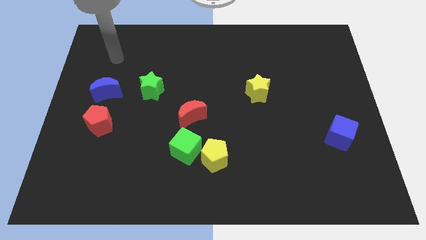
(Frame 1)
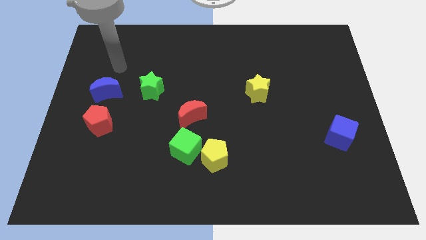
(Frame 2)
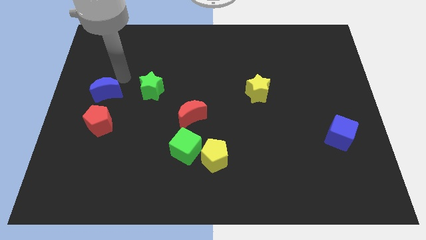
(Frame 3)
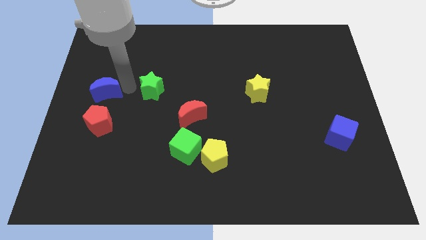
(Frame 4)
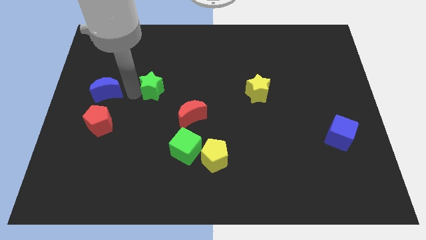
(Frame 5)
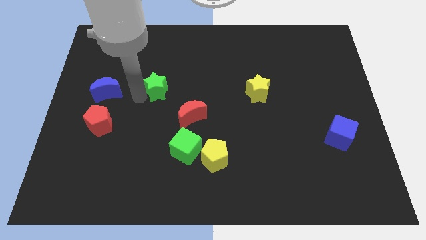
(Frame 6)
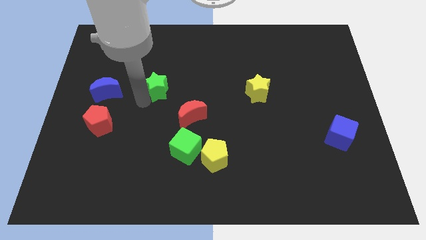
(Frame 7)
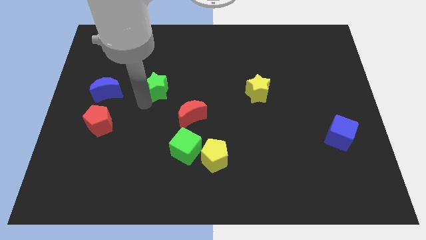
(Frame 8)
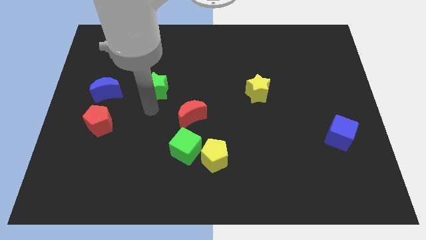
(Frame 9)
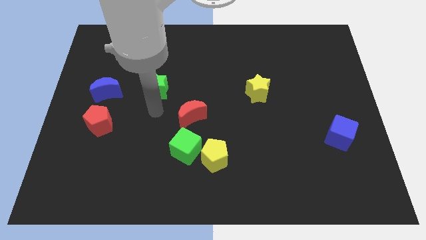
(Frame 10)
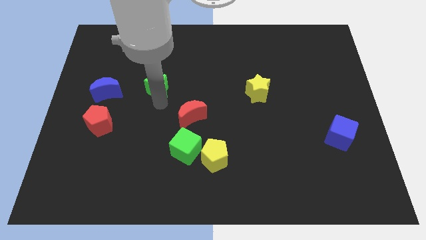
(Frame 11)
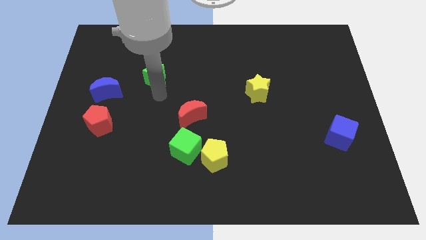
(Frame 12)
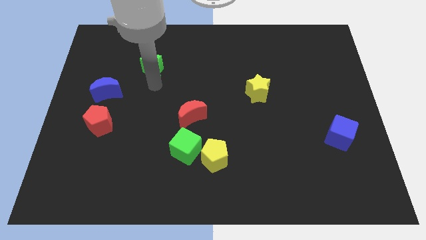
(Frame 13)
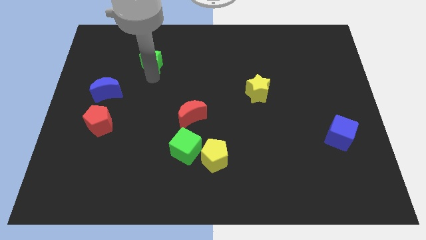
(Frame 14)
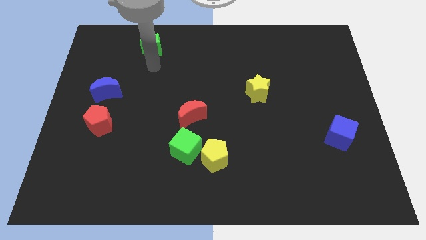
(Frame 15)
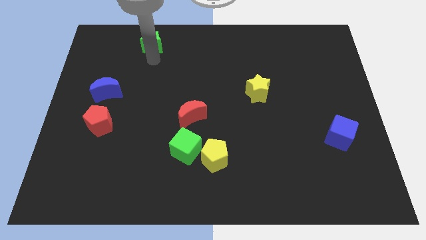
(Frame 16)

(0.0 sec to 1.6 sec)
move the green star to the top of the board

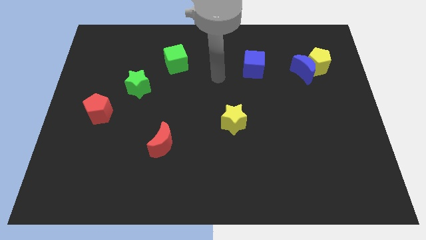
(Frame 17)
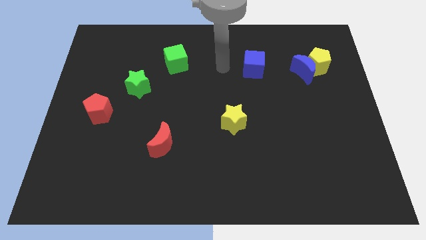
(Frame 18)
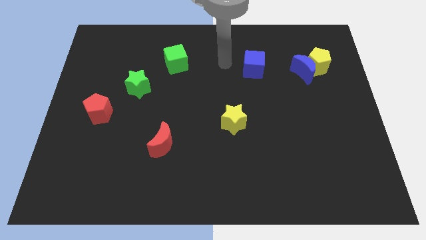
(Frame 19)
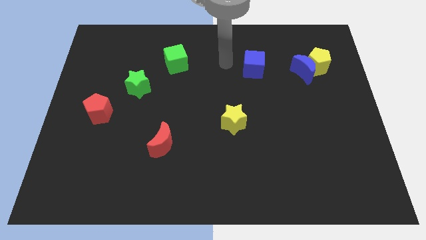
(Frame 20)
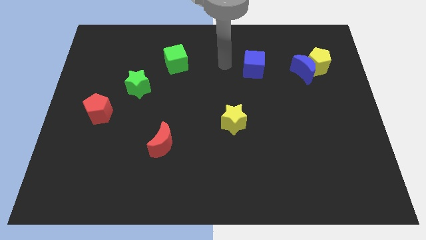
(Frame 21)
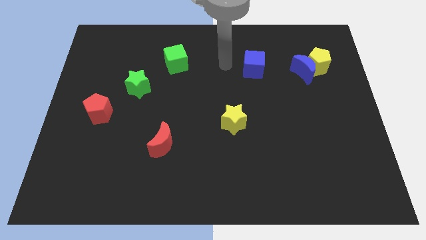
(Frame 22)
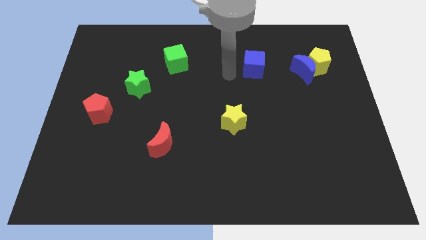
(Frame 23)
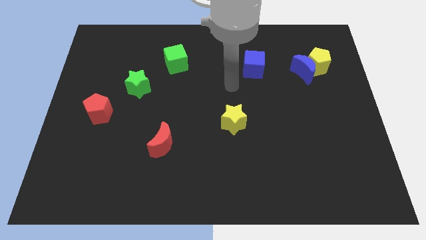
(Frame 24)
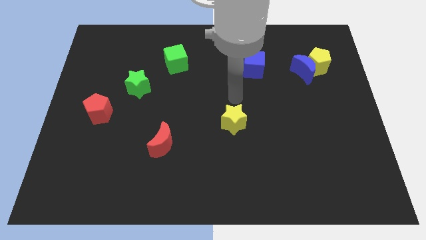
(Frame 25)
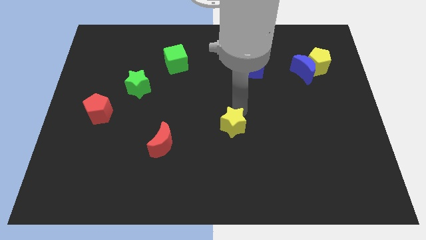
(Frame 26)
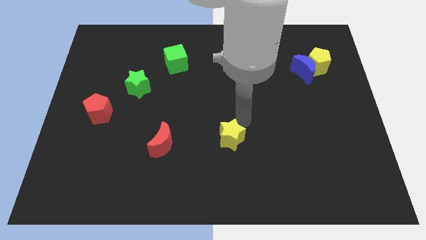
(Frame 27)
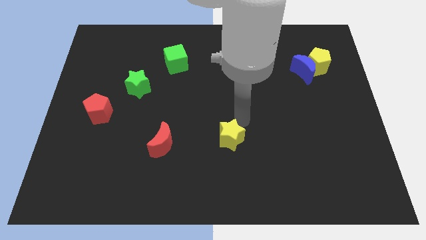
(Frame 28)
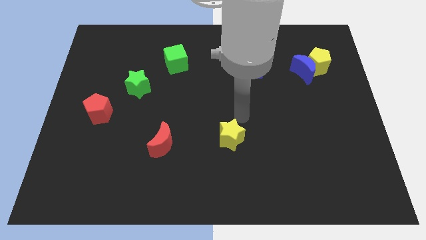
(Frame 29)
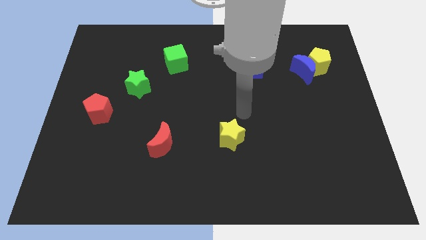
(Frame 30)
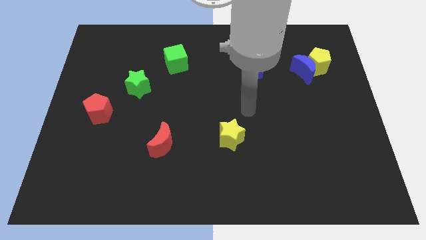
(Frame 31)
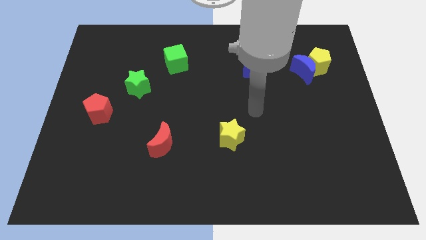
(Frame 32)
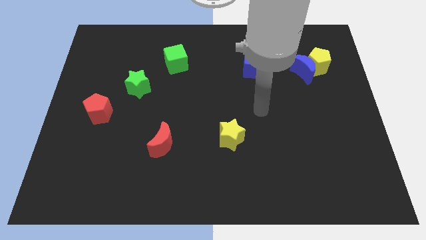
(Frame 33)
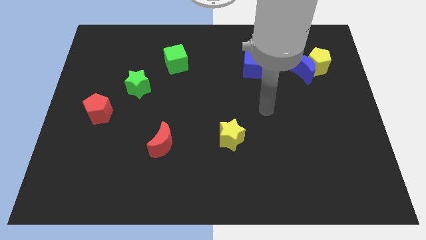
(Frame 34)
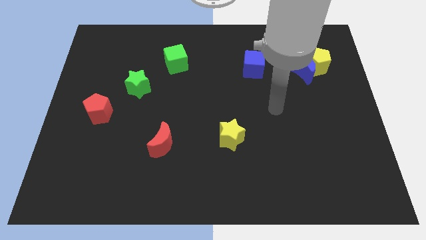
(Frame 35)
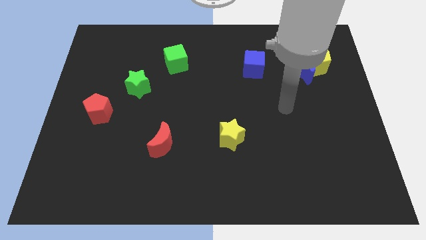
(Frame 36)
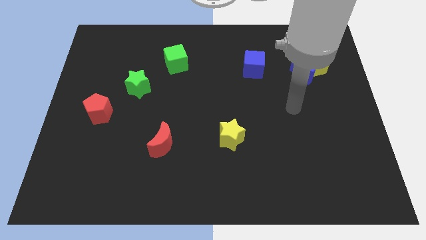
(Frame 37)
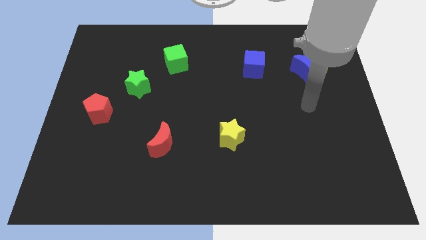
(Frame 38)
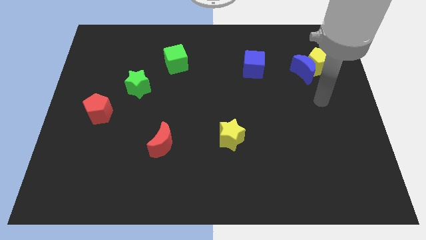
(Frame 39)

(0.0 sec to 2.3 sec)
move the yellow star towards the bottom side of the board

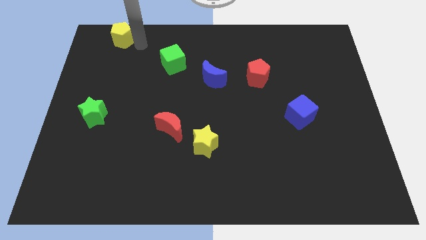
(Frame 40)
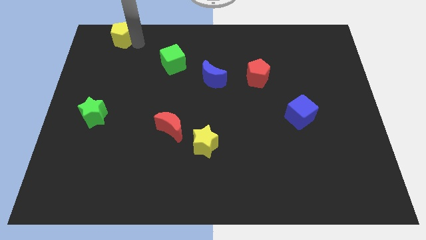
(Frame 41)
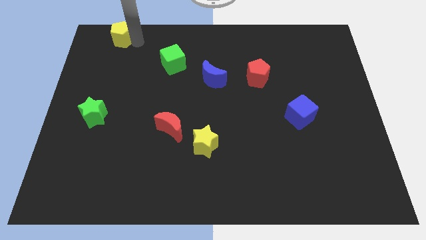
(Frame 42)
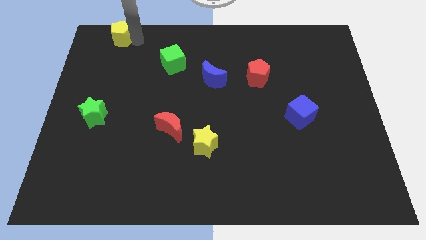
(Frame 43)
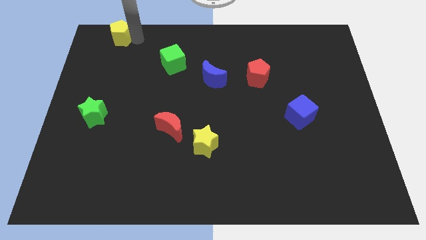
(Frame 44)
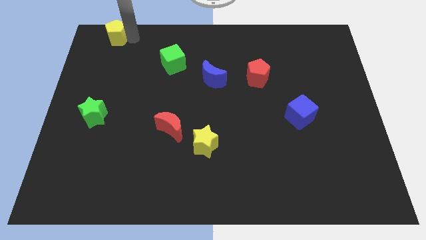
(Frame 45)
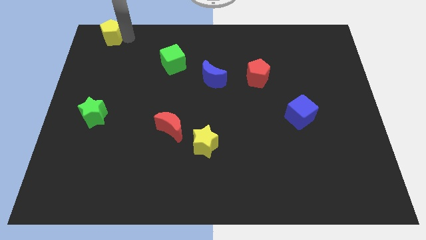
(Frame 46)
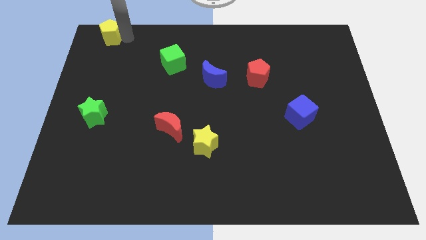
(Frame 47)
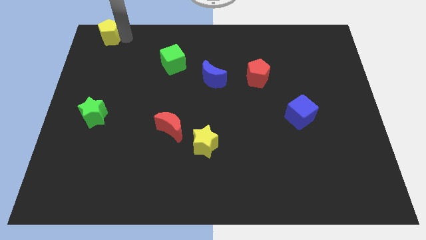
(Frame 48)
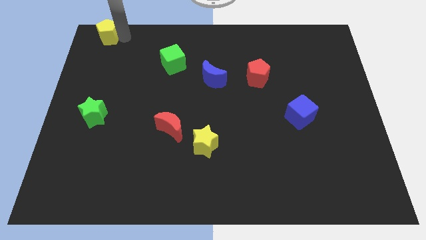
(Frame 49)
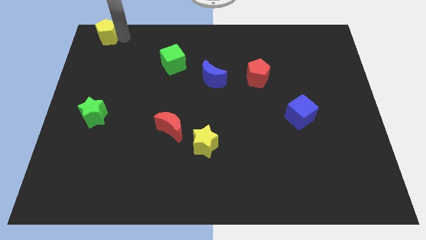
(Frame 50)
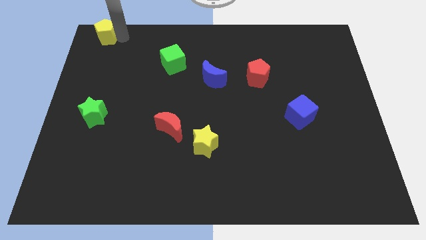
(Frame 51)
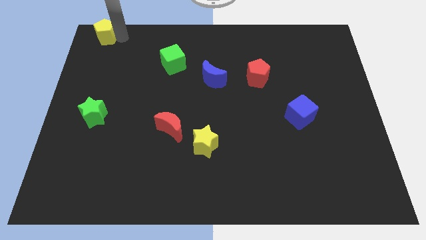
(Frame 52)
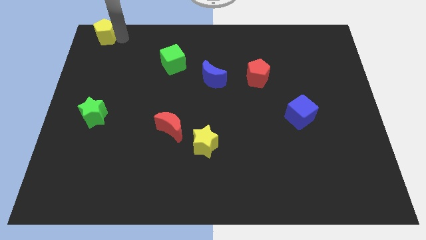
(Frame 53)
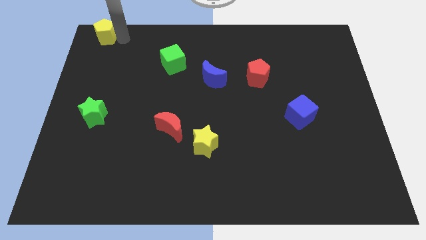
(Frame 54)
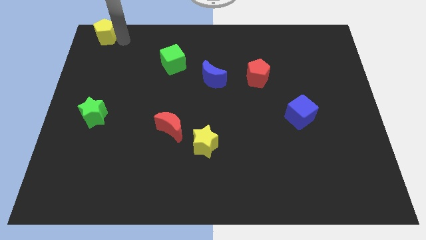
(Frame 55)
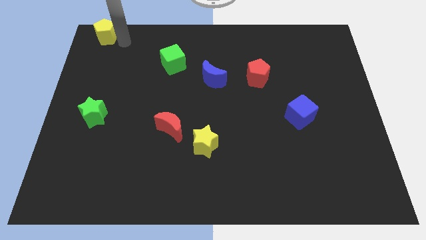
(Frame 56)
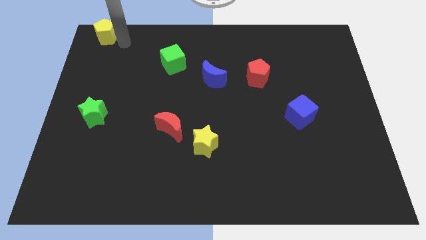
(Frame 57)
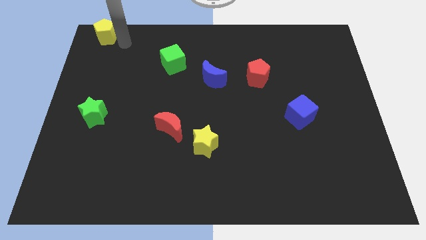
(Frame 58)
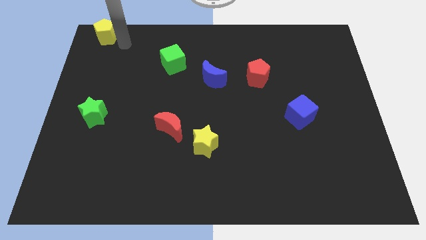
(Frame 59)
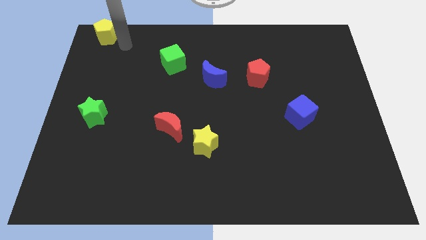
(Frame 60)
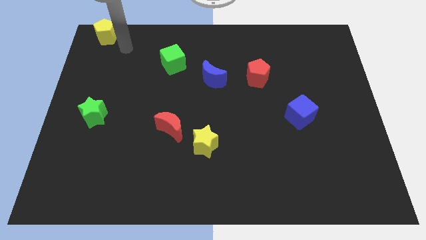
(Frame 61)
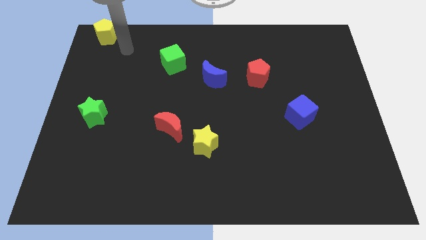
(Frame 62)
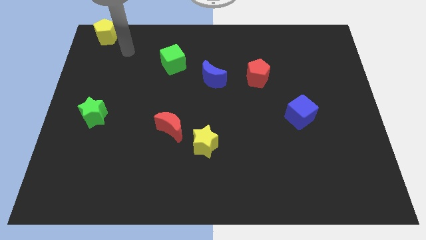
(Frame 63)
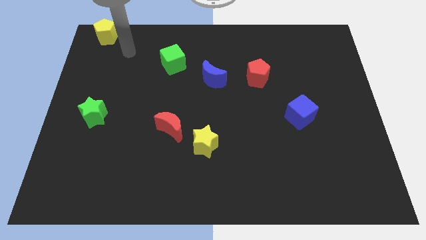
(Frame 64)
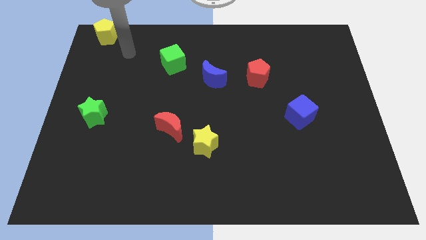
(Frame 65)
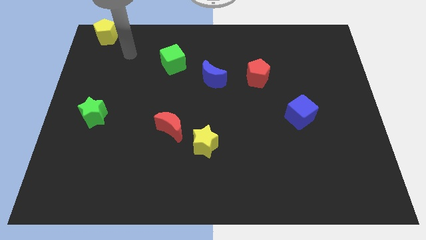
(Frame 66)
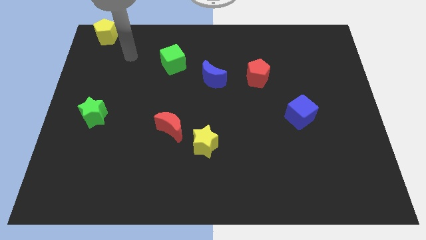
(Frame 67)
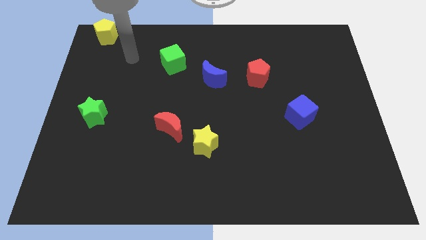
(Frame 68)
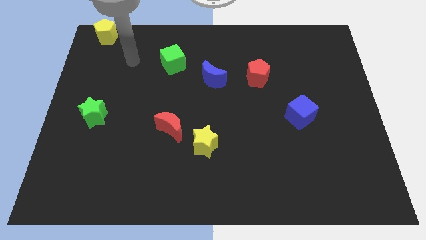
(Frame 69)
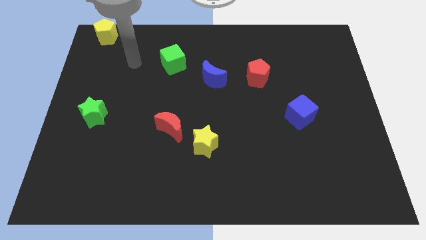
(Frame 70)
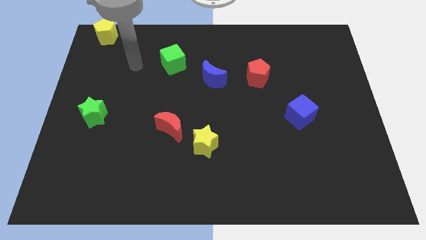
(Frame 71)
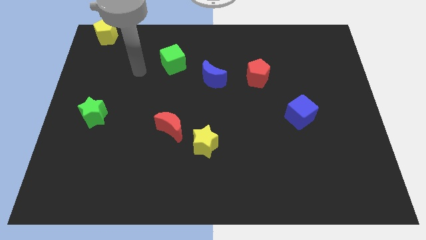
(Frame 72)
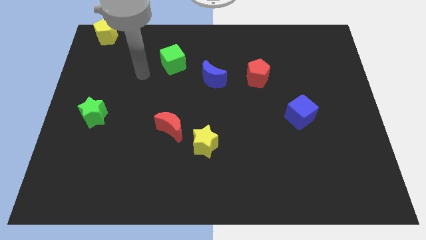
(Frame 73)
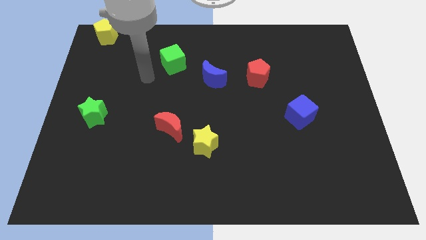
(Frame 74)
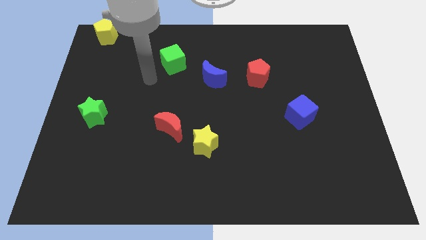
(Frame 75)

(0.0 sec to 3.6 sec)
put the yellow pentagon at the top left corner of the board

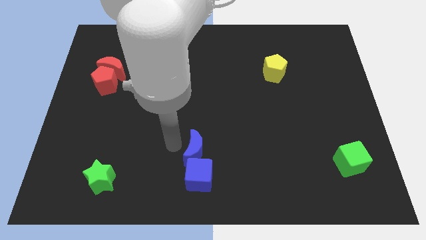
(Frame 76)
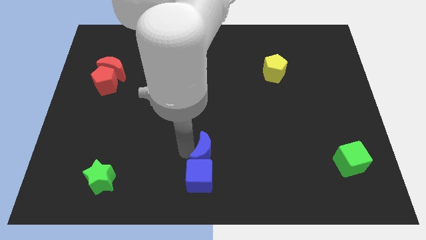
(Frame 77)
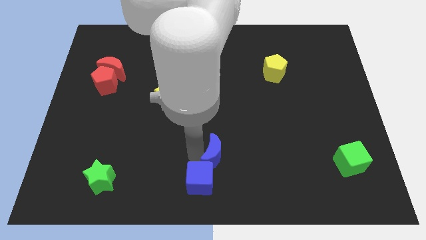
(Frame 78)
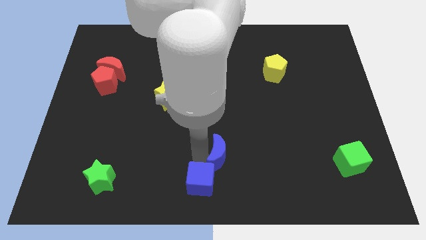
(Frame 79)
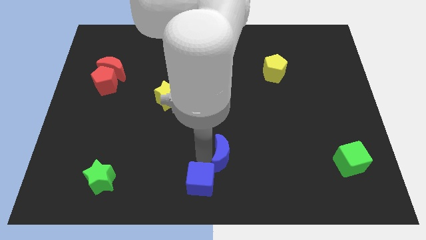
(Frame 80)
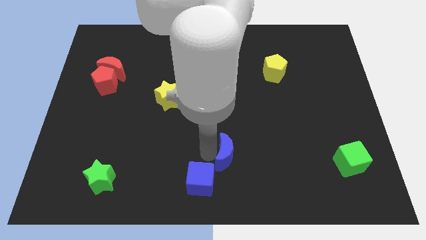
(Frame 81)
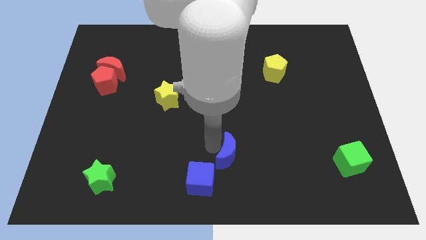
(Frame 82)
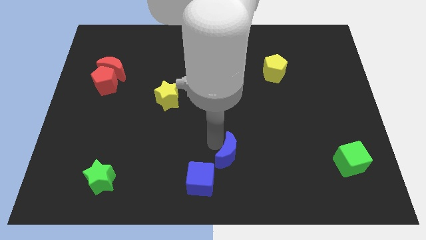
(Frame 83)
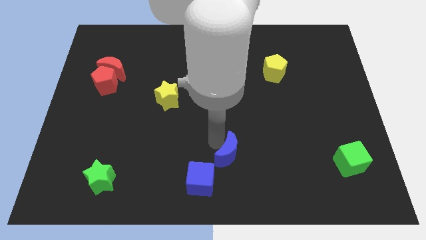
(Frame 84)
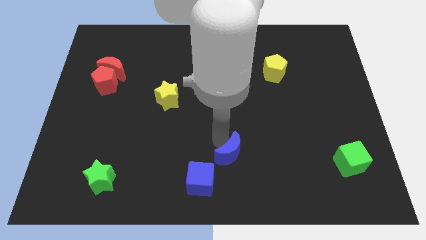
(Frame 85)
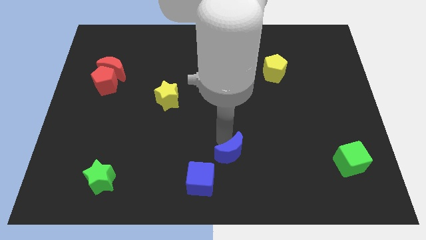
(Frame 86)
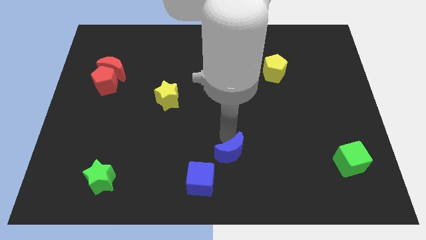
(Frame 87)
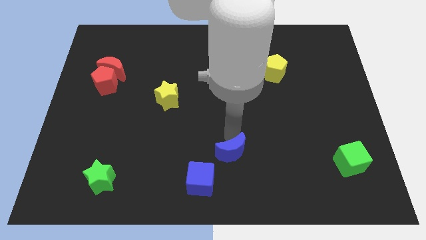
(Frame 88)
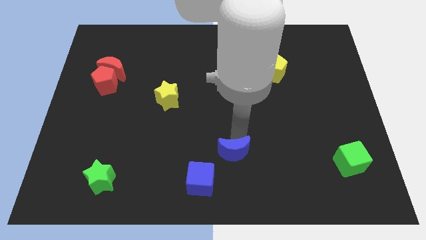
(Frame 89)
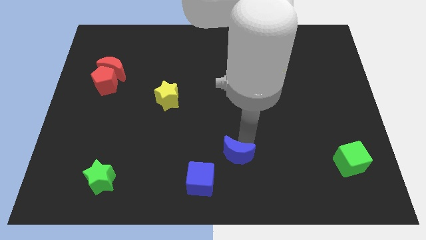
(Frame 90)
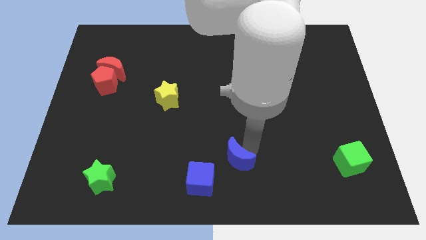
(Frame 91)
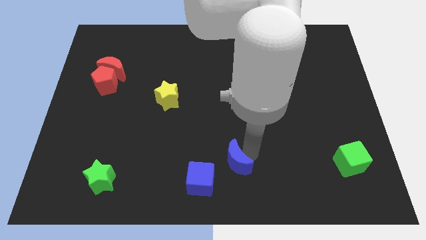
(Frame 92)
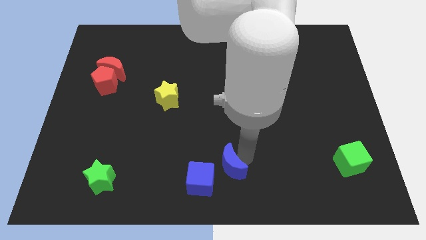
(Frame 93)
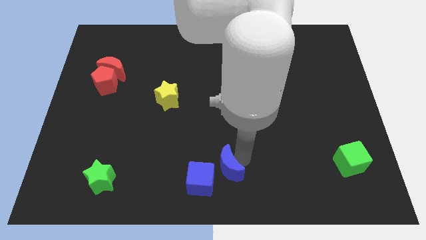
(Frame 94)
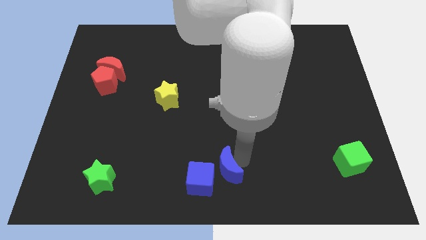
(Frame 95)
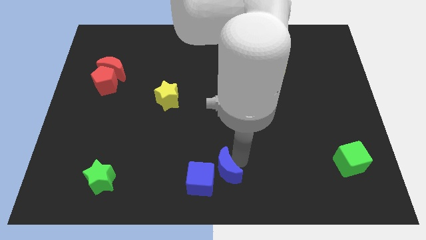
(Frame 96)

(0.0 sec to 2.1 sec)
push the blue moon to the top right of blue cube
